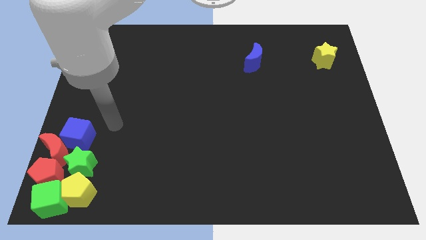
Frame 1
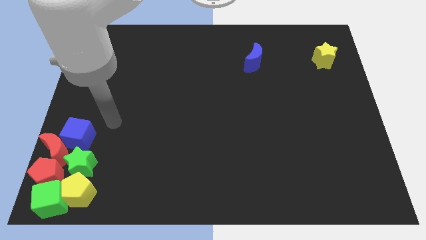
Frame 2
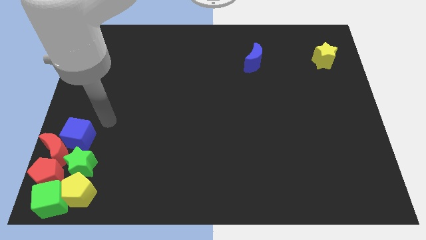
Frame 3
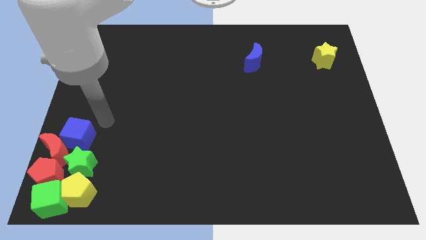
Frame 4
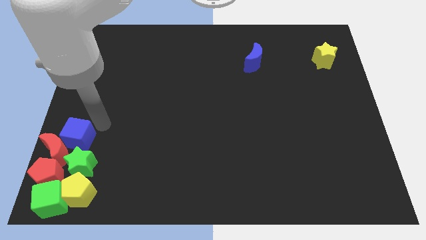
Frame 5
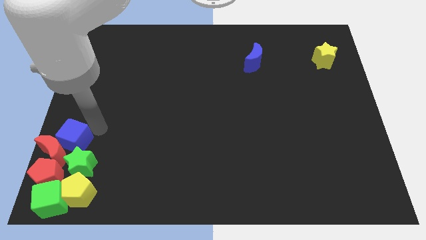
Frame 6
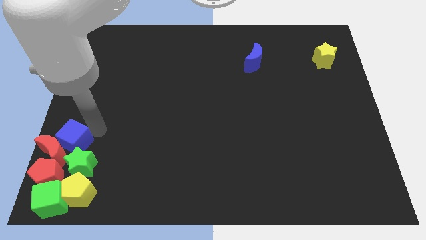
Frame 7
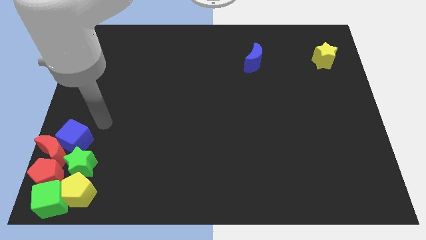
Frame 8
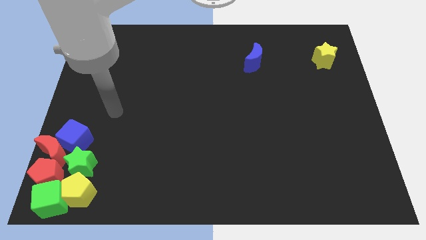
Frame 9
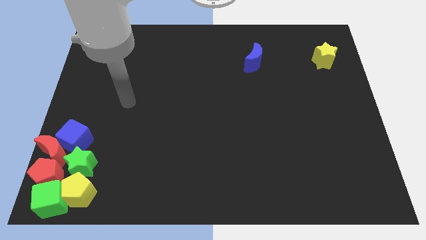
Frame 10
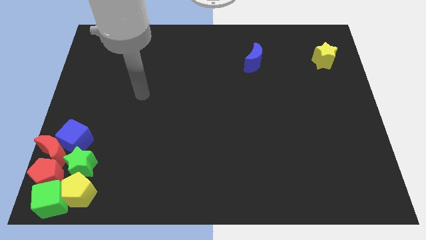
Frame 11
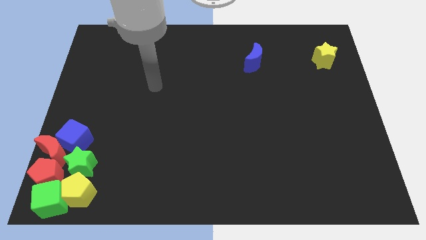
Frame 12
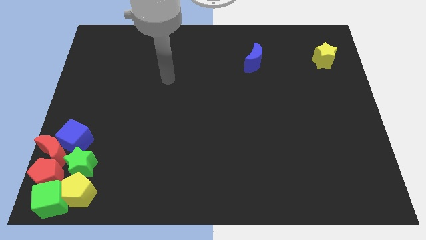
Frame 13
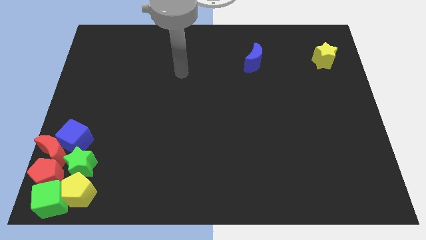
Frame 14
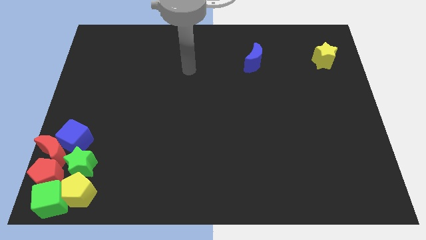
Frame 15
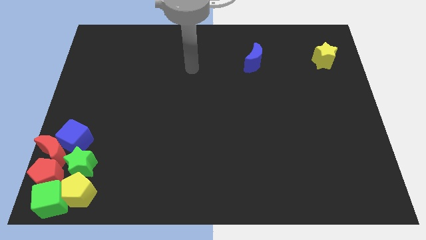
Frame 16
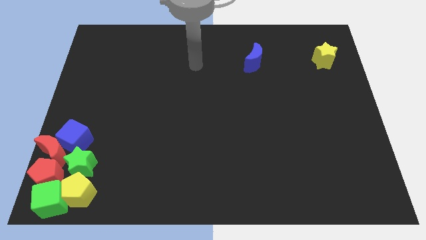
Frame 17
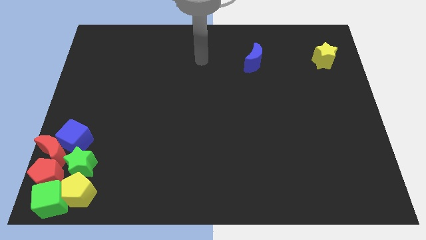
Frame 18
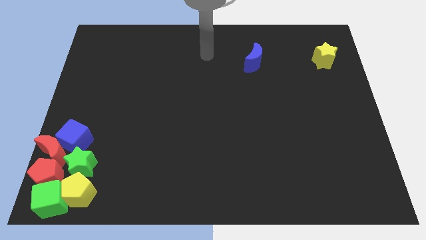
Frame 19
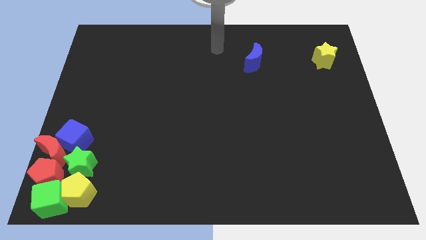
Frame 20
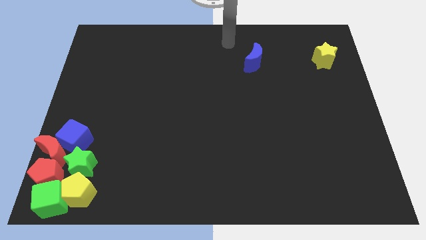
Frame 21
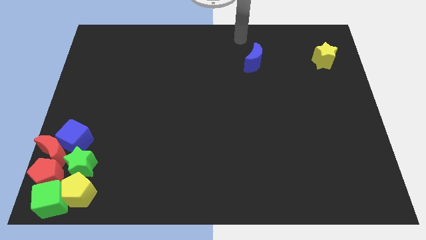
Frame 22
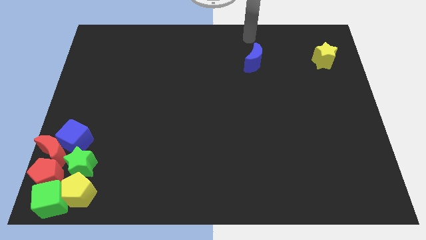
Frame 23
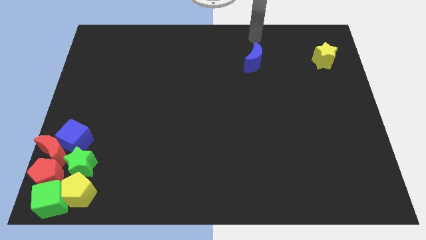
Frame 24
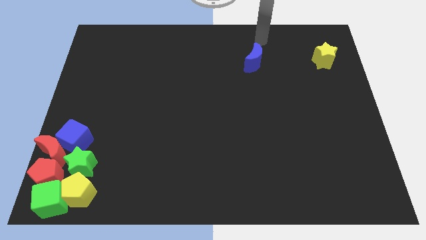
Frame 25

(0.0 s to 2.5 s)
go and point your hand at the top of the blue crescent

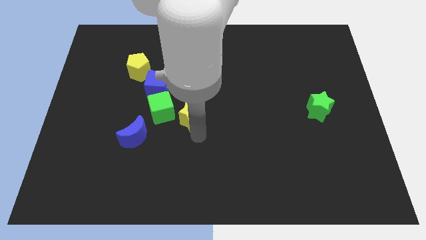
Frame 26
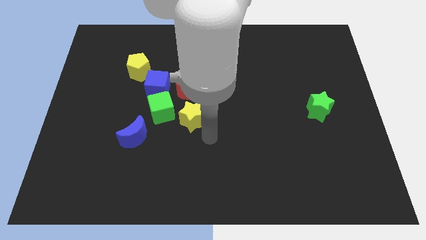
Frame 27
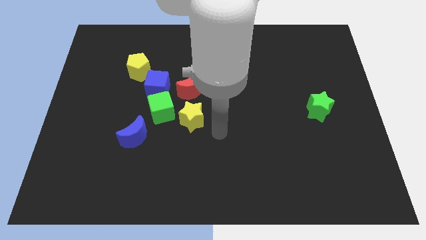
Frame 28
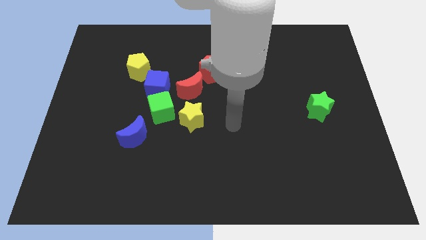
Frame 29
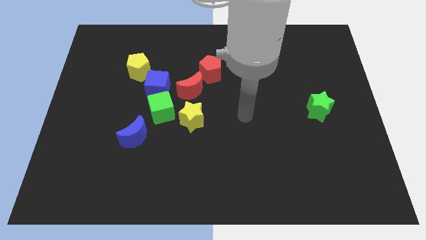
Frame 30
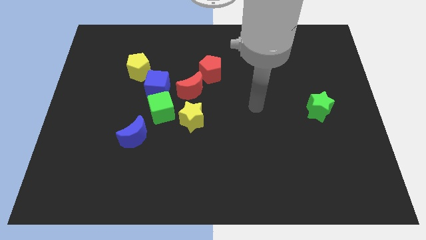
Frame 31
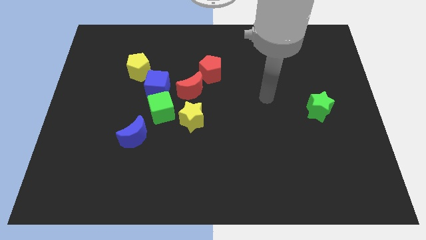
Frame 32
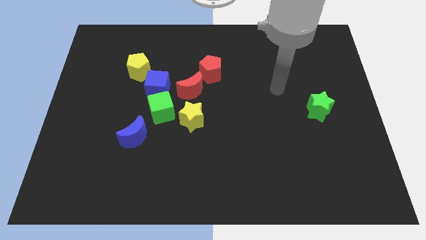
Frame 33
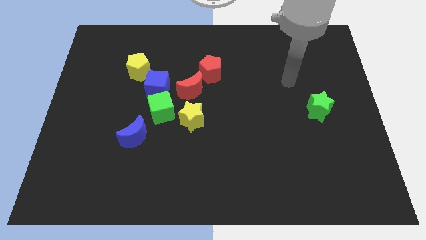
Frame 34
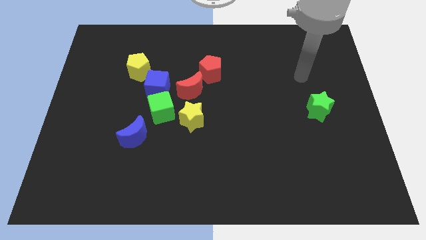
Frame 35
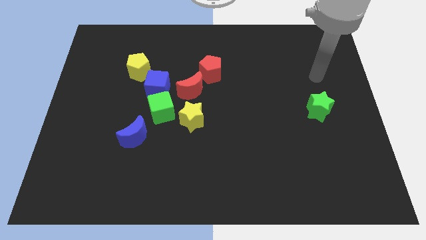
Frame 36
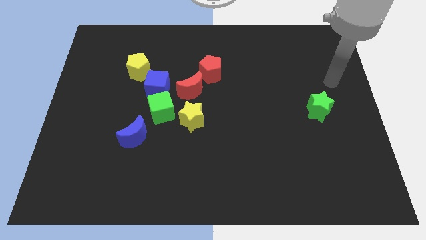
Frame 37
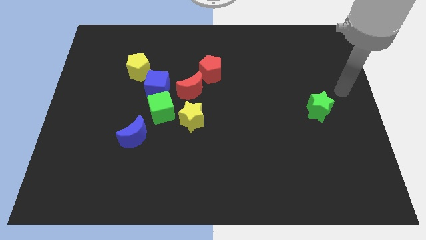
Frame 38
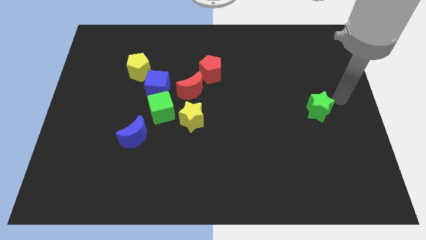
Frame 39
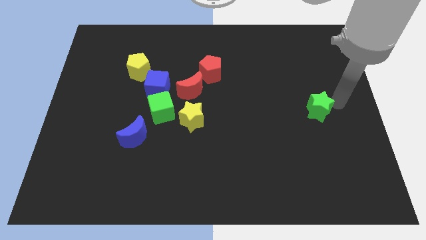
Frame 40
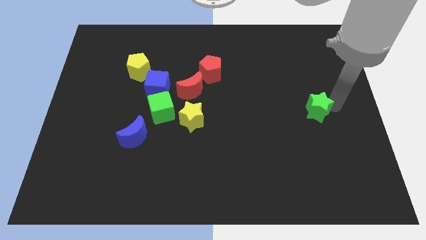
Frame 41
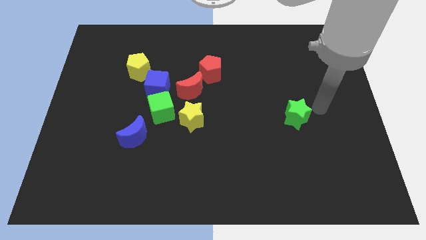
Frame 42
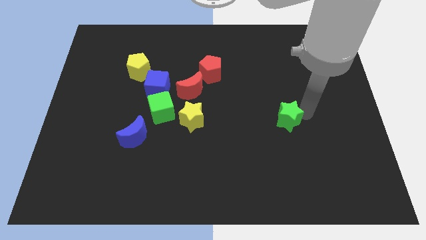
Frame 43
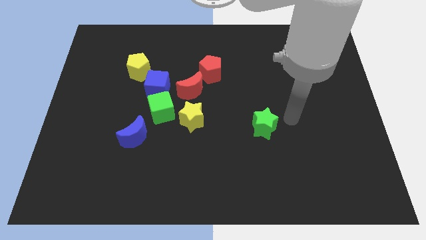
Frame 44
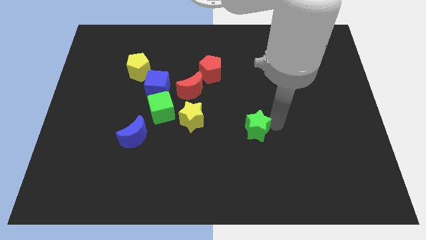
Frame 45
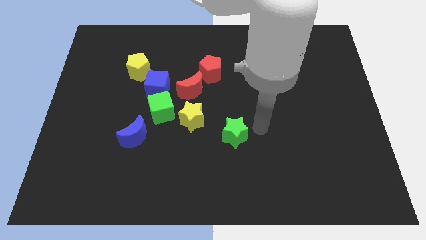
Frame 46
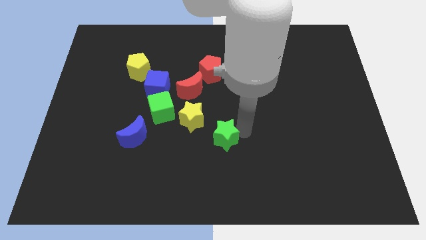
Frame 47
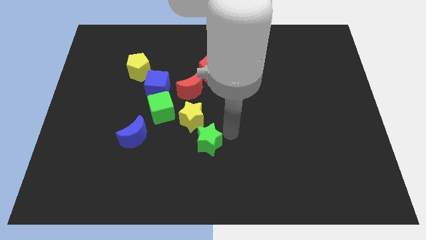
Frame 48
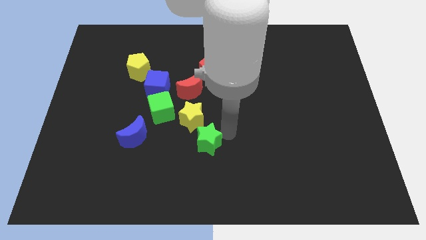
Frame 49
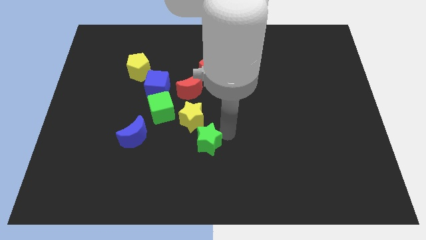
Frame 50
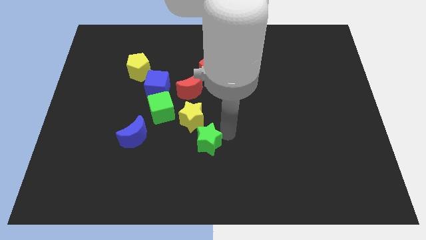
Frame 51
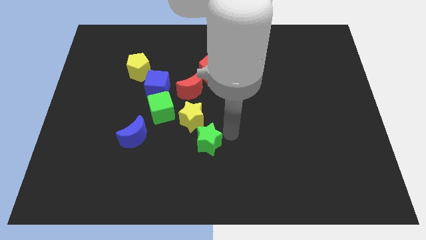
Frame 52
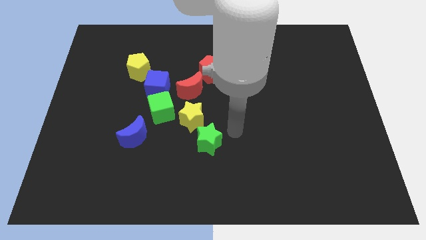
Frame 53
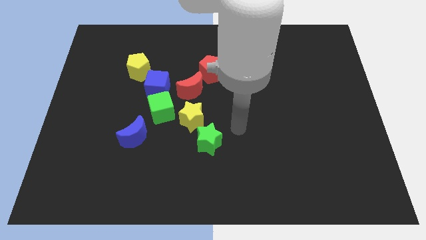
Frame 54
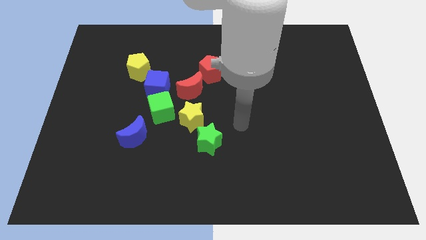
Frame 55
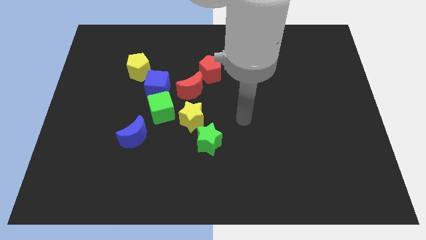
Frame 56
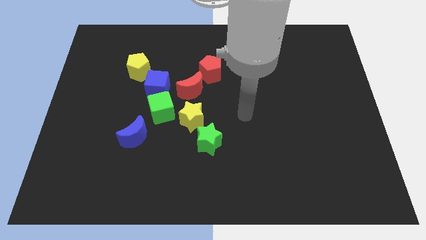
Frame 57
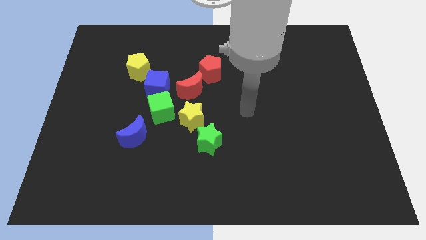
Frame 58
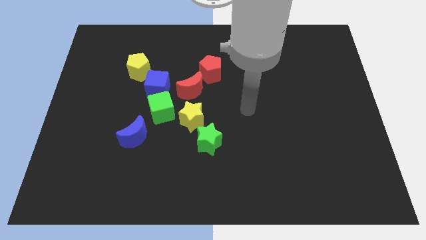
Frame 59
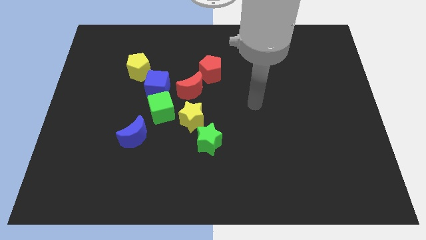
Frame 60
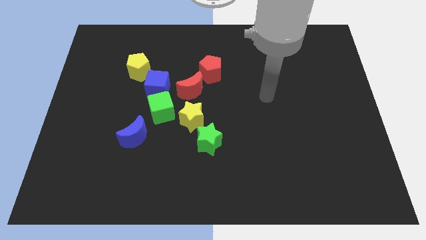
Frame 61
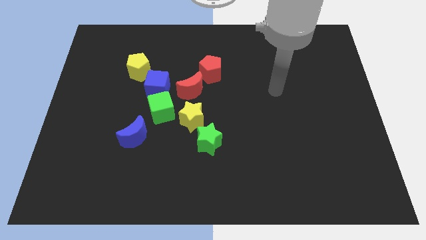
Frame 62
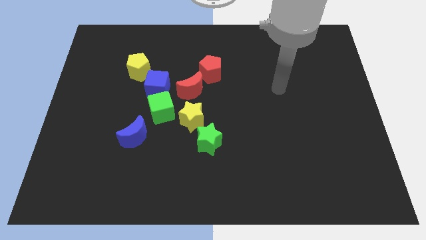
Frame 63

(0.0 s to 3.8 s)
drag the green star towards the bottom of the yellow star

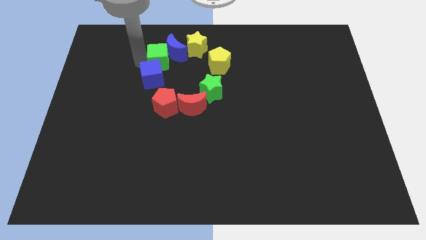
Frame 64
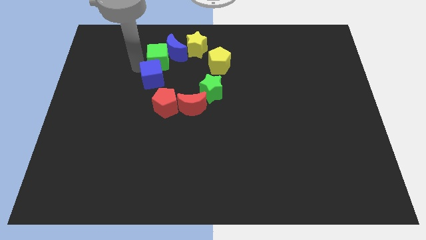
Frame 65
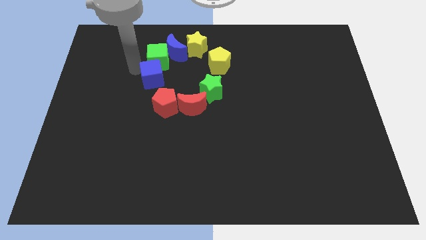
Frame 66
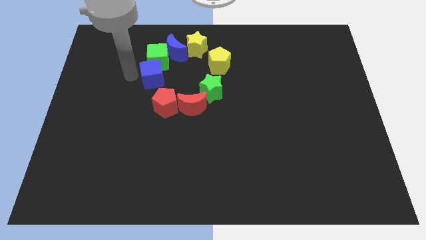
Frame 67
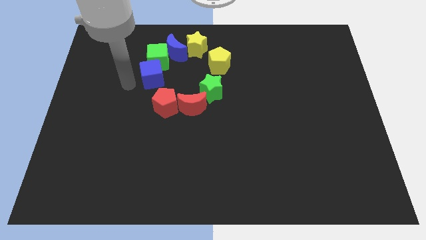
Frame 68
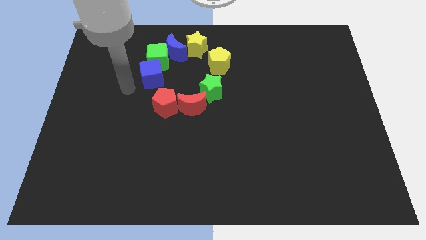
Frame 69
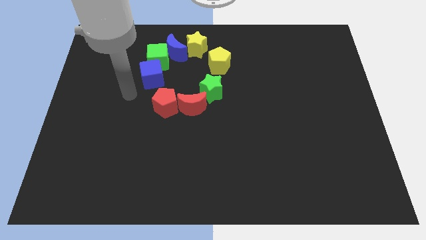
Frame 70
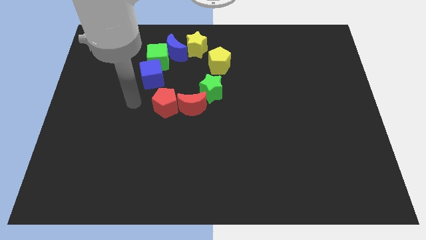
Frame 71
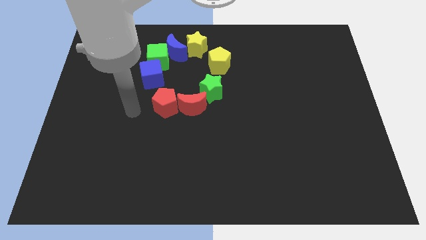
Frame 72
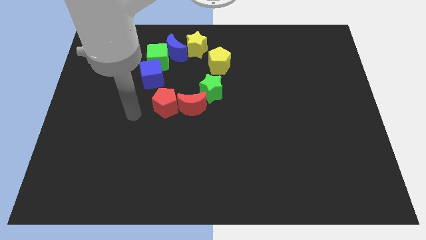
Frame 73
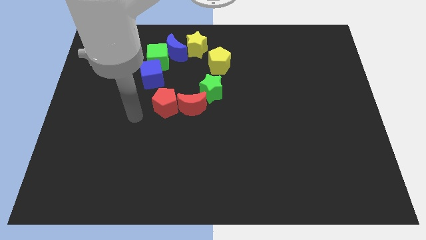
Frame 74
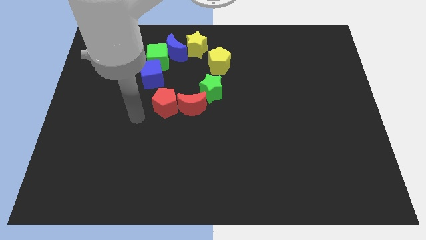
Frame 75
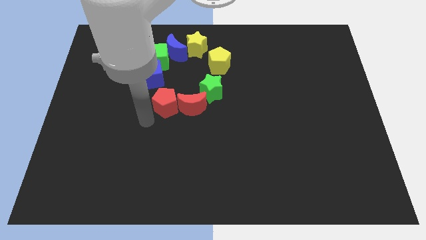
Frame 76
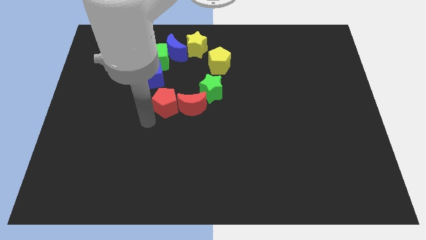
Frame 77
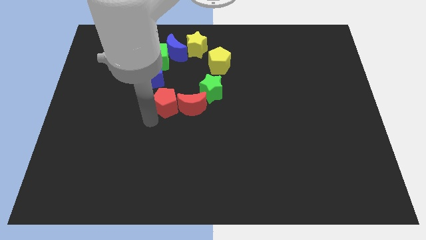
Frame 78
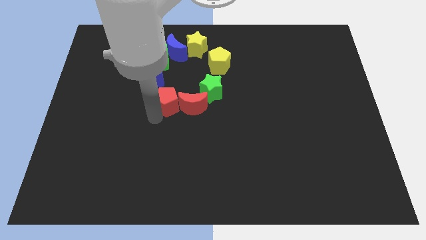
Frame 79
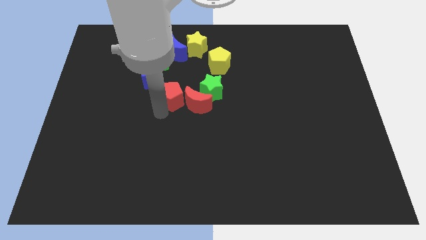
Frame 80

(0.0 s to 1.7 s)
place your hand below the red pentagon

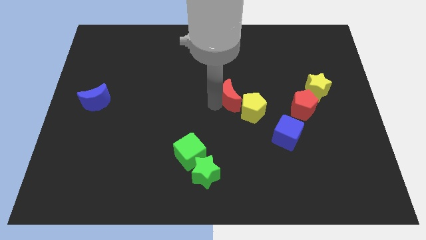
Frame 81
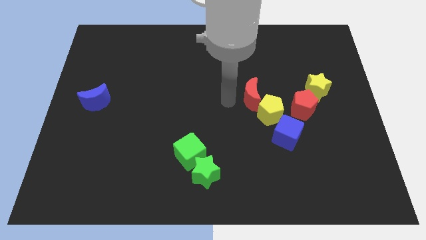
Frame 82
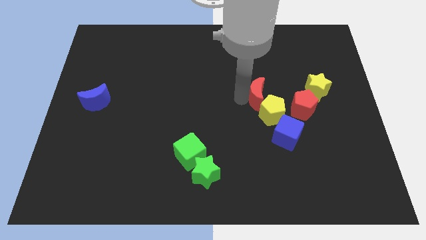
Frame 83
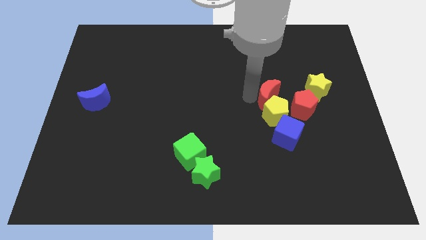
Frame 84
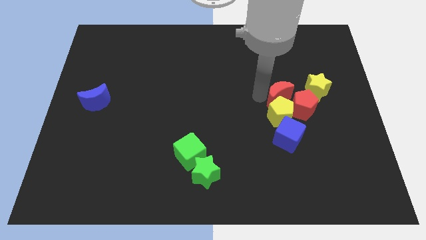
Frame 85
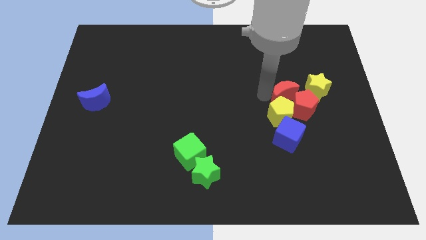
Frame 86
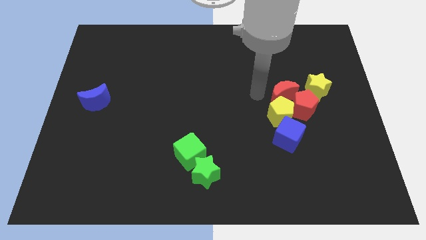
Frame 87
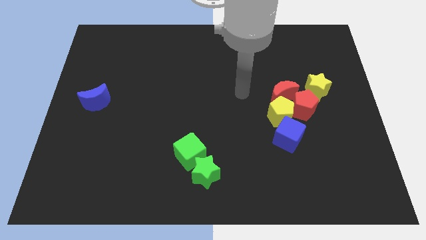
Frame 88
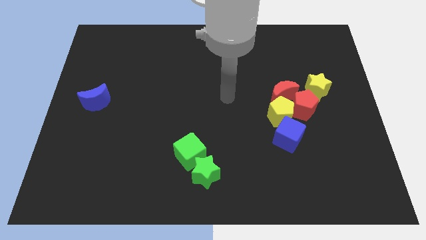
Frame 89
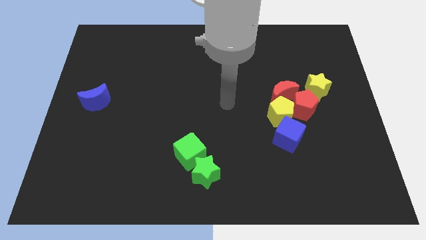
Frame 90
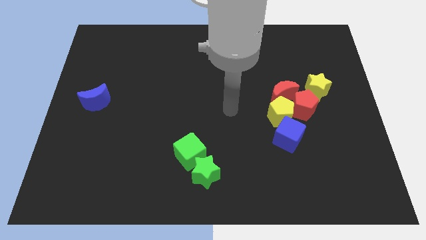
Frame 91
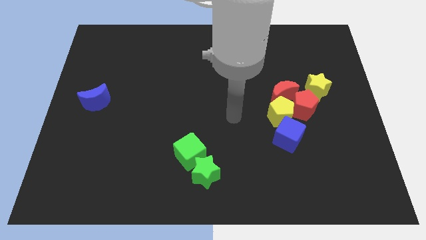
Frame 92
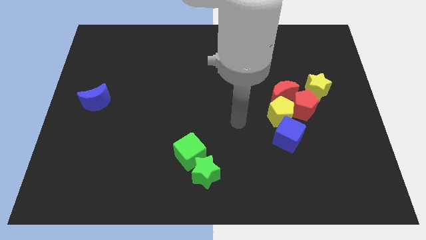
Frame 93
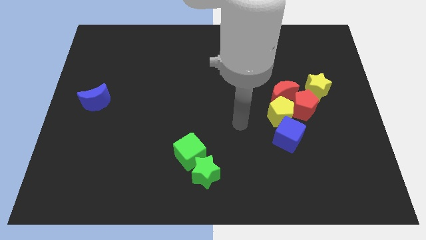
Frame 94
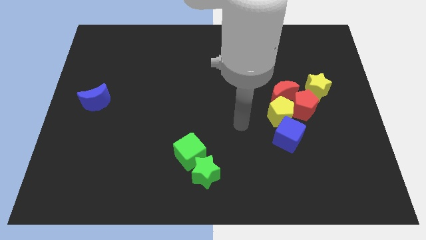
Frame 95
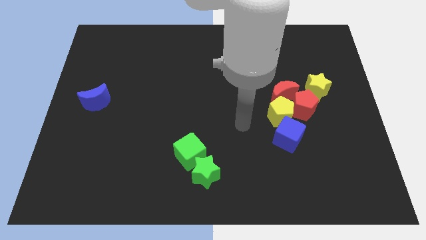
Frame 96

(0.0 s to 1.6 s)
push red moon to the left of yellow star
